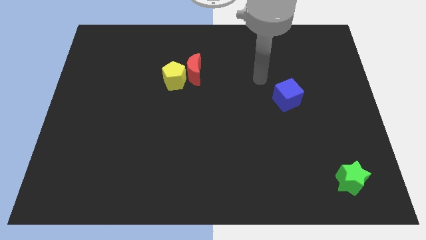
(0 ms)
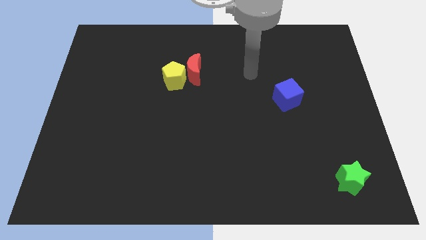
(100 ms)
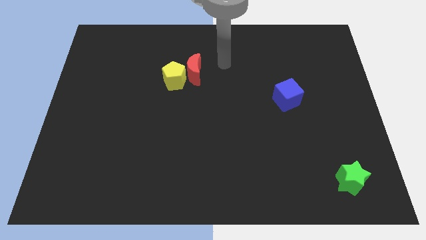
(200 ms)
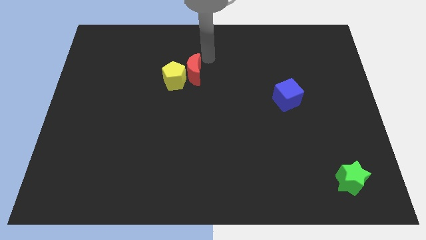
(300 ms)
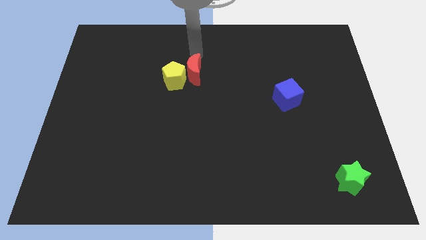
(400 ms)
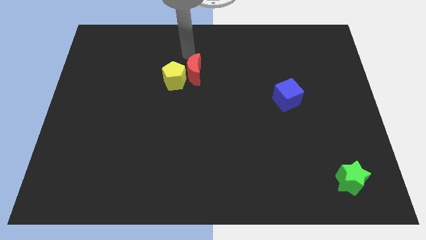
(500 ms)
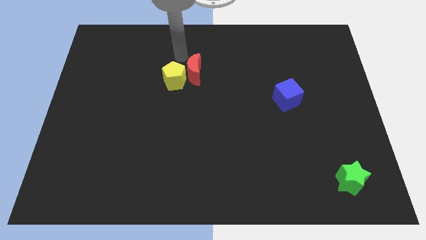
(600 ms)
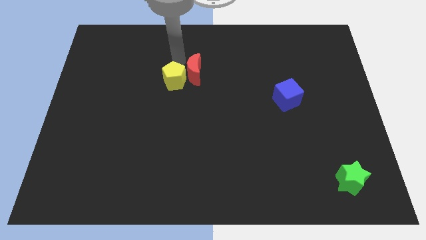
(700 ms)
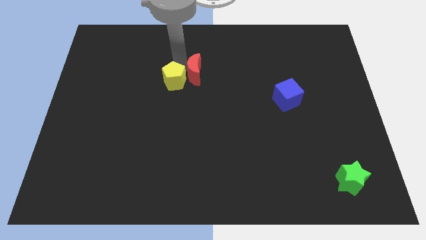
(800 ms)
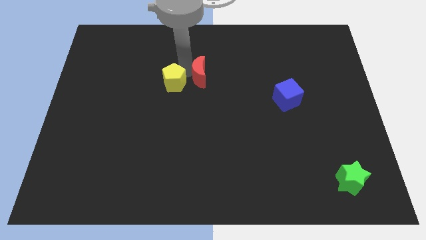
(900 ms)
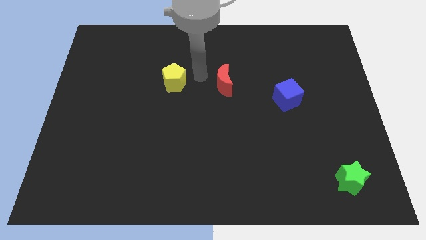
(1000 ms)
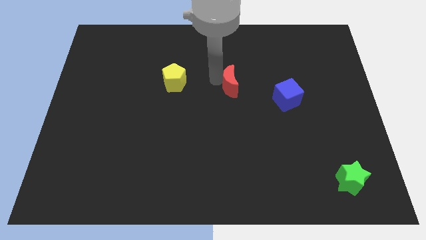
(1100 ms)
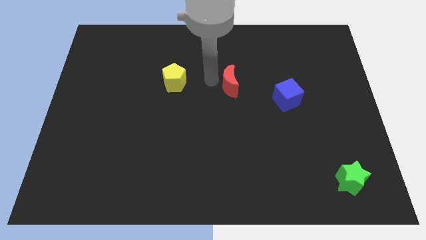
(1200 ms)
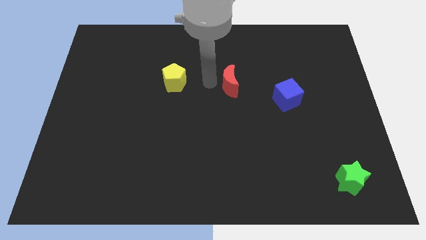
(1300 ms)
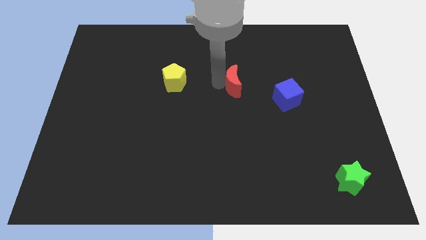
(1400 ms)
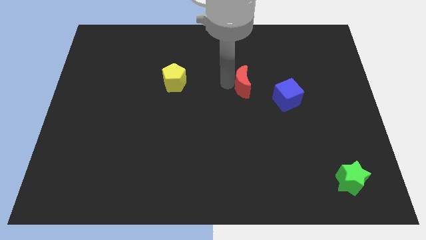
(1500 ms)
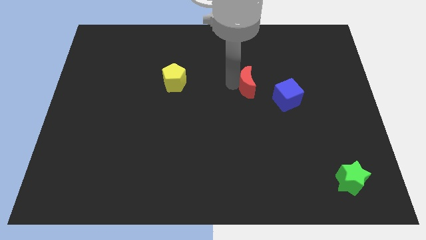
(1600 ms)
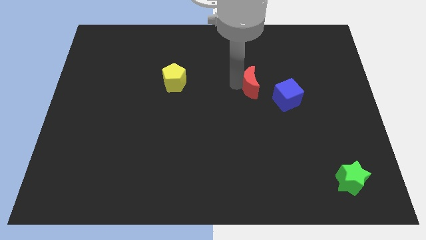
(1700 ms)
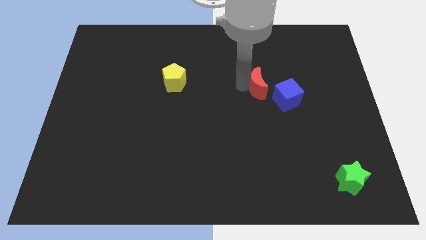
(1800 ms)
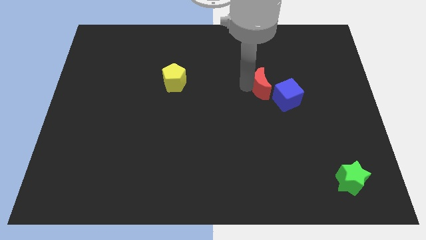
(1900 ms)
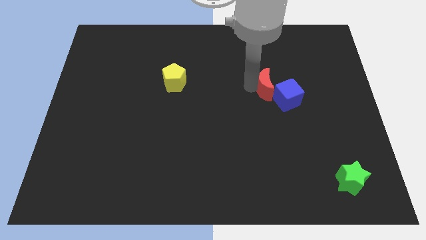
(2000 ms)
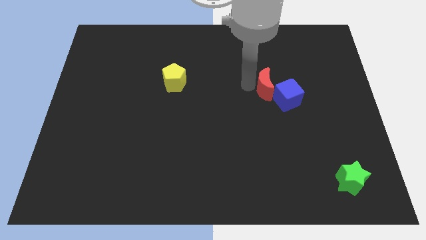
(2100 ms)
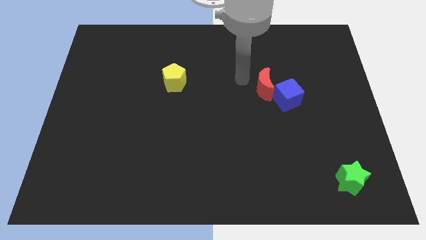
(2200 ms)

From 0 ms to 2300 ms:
slide the moon towards the blue block

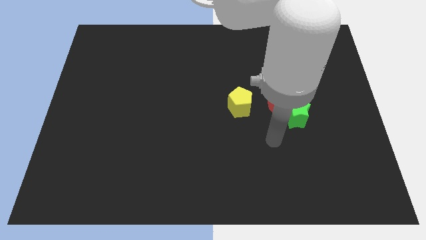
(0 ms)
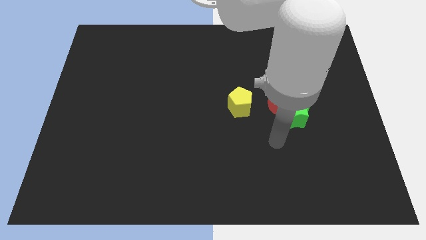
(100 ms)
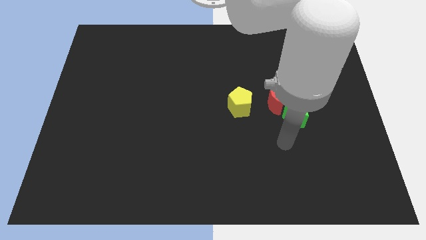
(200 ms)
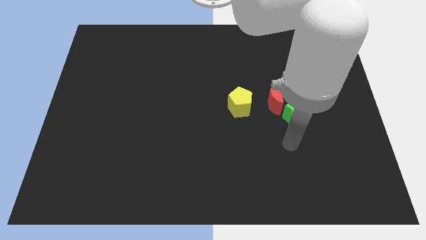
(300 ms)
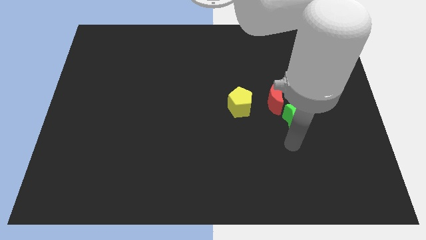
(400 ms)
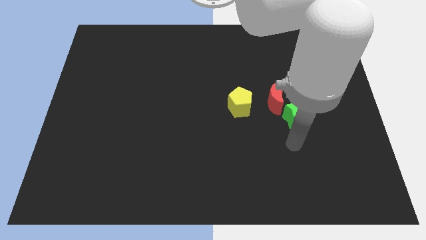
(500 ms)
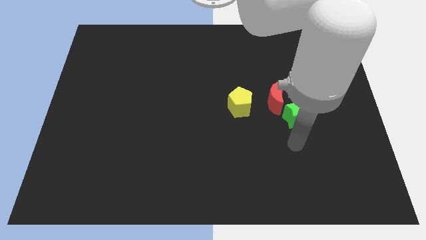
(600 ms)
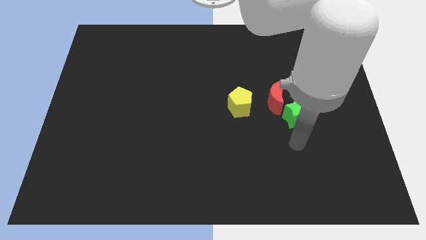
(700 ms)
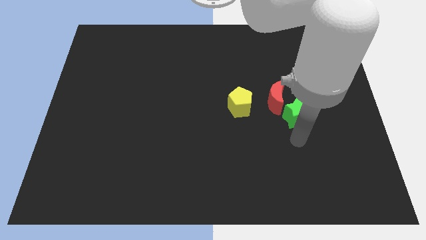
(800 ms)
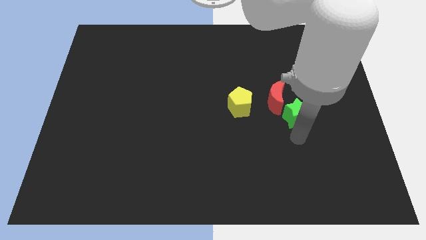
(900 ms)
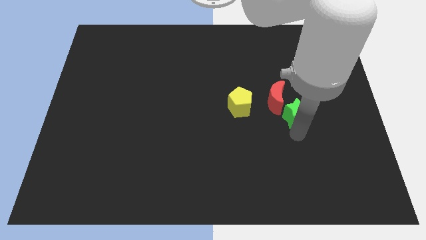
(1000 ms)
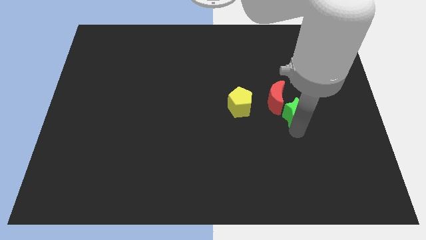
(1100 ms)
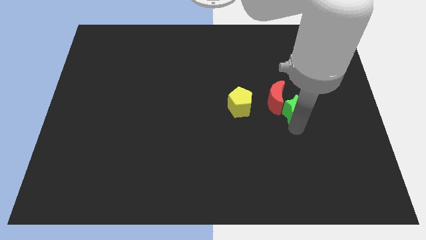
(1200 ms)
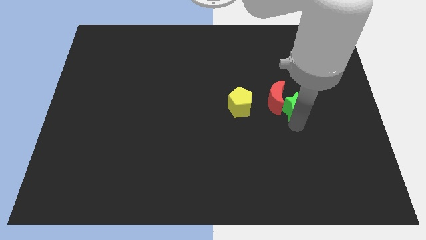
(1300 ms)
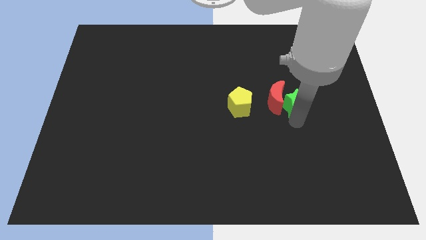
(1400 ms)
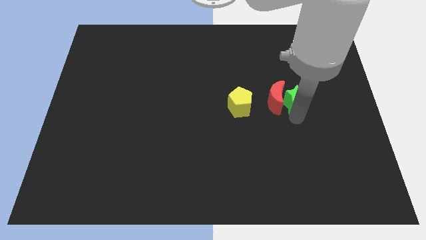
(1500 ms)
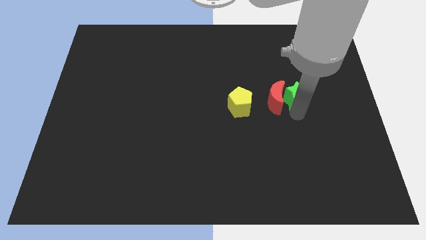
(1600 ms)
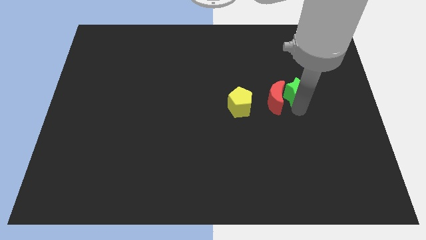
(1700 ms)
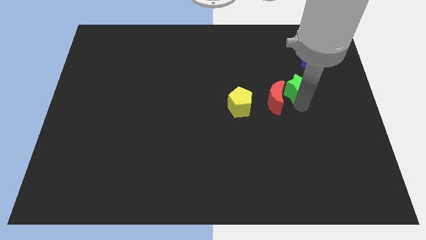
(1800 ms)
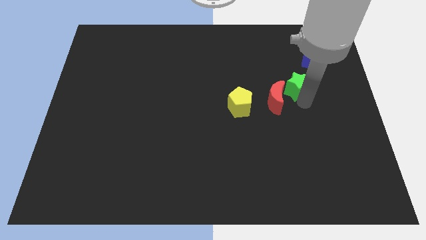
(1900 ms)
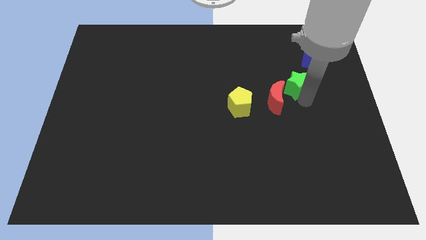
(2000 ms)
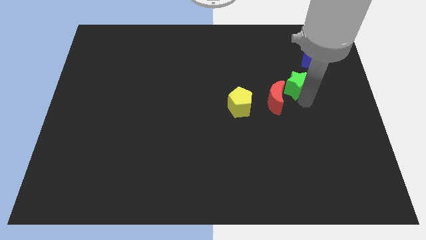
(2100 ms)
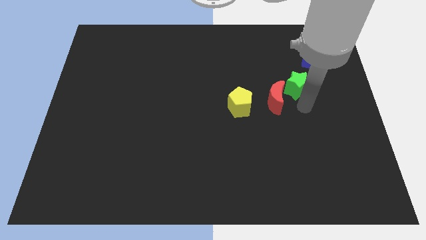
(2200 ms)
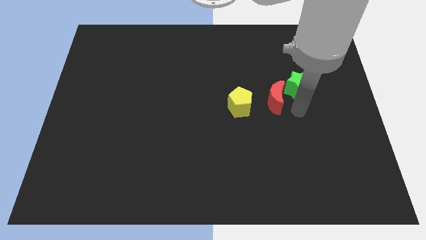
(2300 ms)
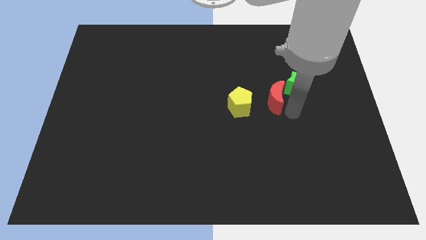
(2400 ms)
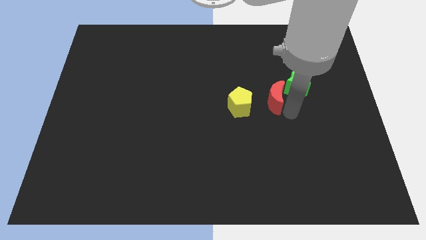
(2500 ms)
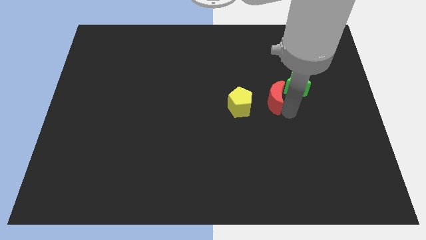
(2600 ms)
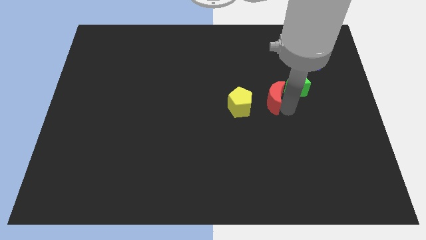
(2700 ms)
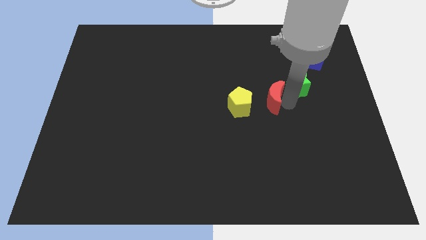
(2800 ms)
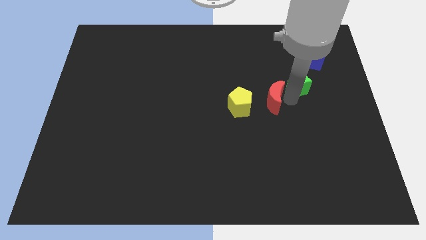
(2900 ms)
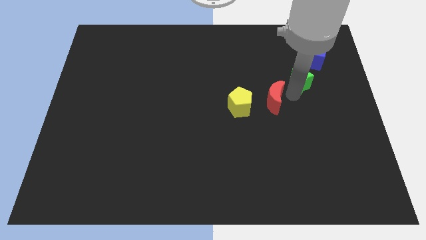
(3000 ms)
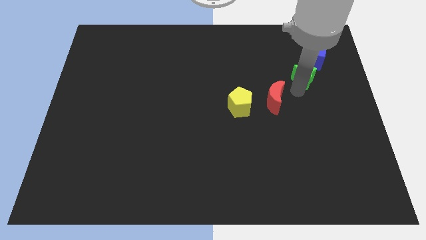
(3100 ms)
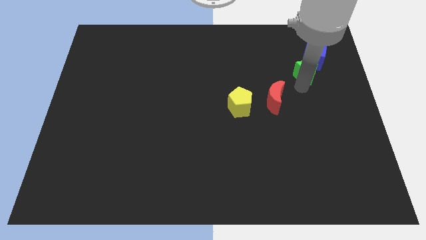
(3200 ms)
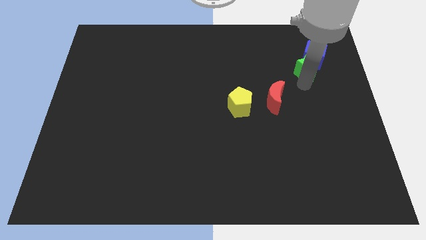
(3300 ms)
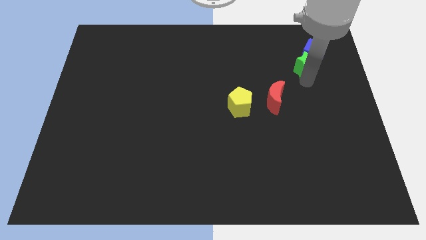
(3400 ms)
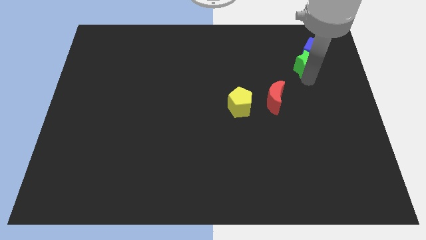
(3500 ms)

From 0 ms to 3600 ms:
put the green star close to the cube

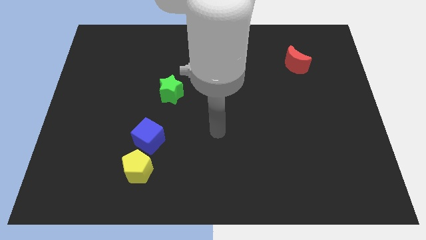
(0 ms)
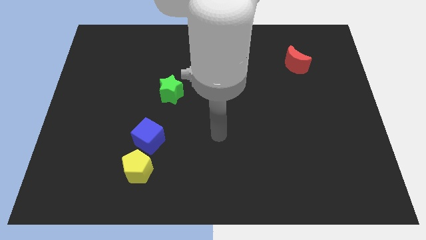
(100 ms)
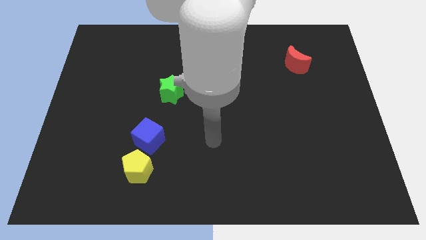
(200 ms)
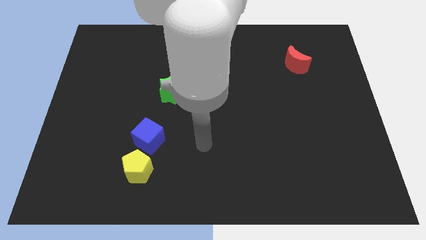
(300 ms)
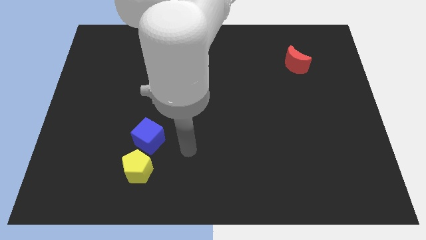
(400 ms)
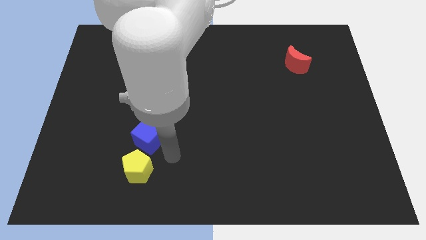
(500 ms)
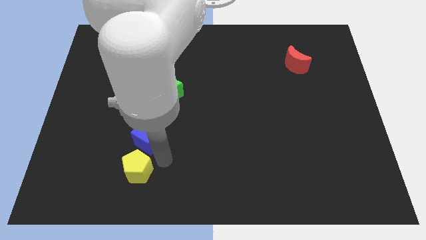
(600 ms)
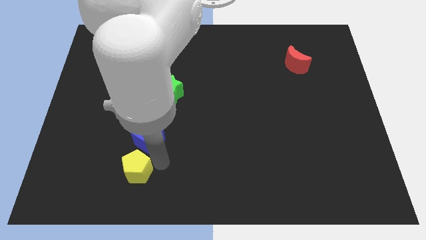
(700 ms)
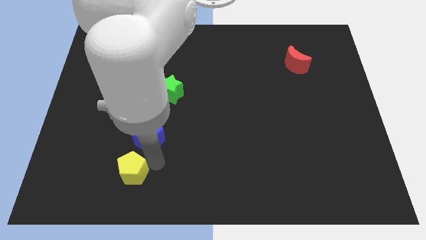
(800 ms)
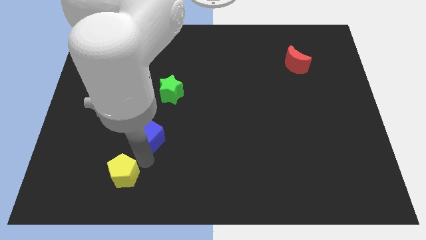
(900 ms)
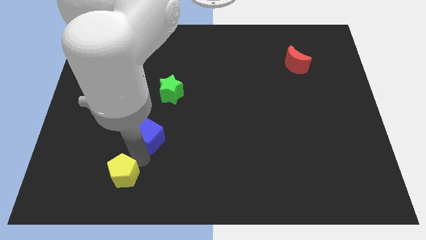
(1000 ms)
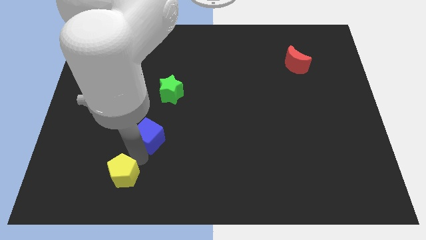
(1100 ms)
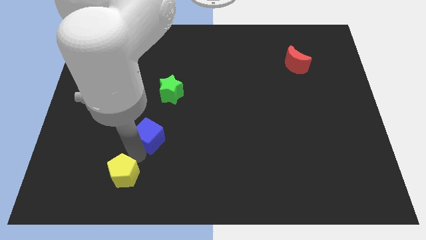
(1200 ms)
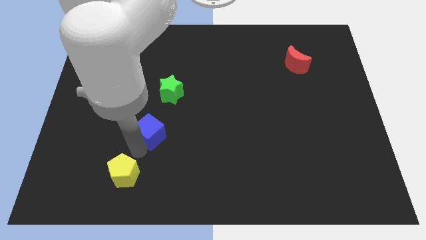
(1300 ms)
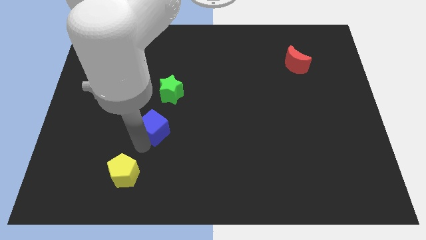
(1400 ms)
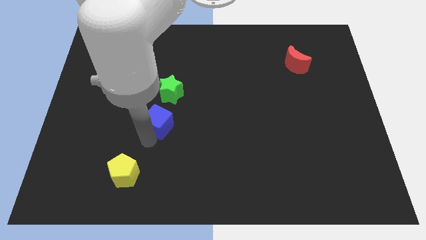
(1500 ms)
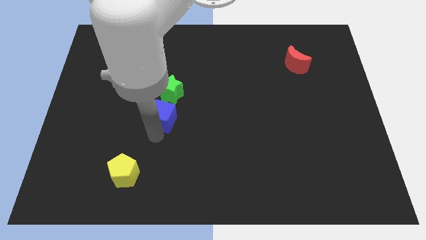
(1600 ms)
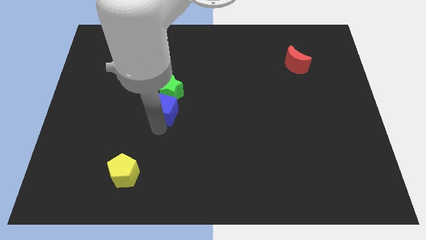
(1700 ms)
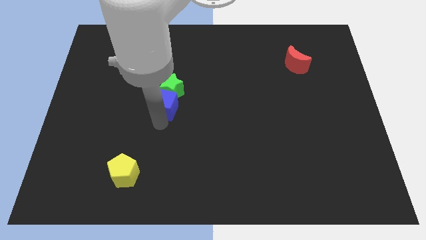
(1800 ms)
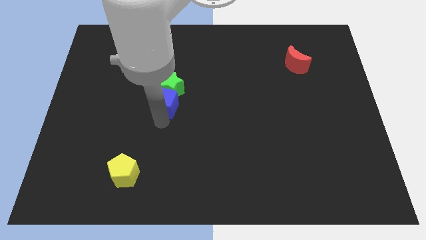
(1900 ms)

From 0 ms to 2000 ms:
slide the blue block next to the green block

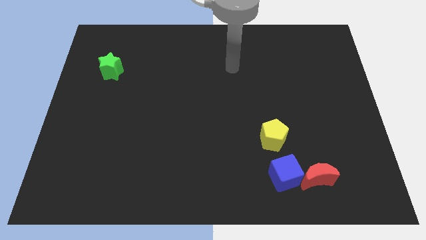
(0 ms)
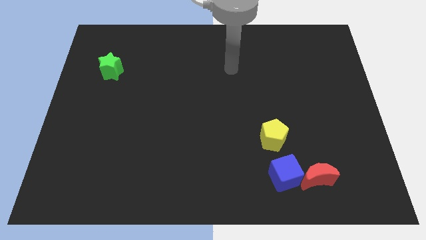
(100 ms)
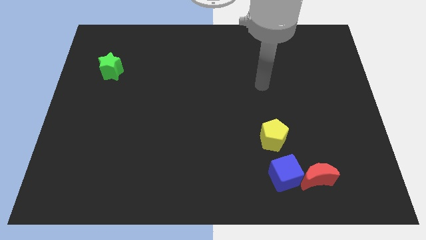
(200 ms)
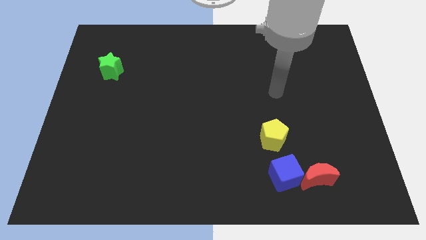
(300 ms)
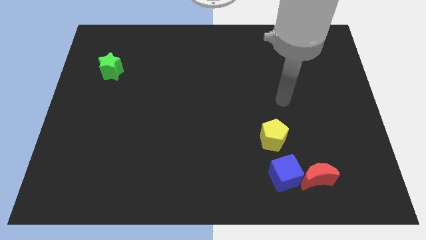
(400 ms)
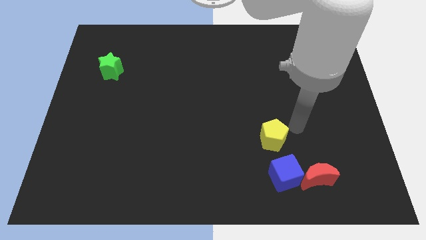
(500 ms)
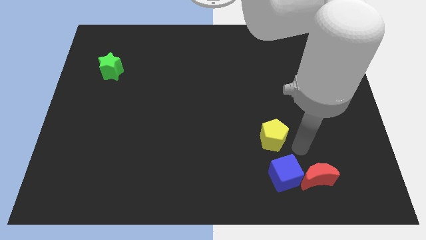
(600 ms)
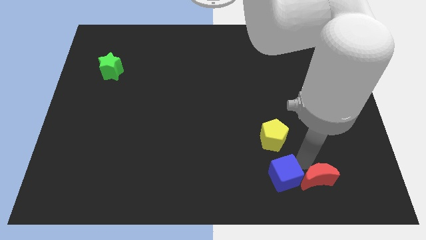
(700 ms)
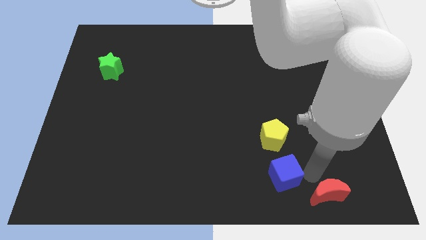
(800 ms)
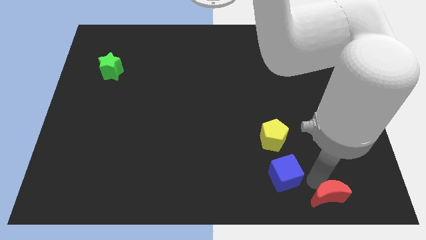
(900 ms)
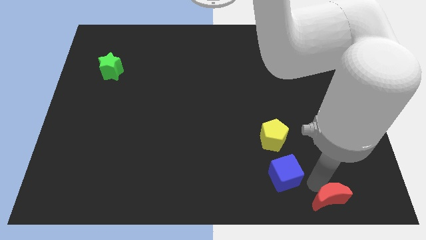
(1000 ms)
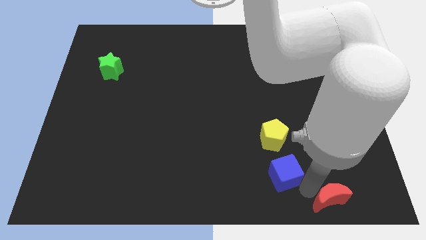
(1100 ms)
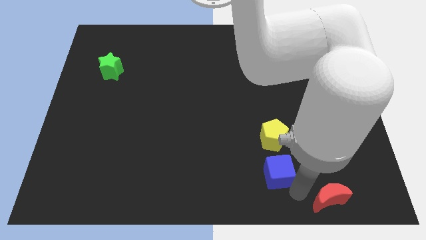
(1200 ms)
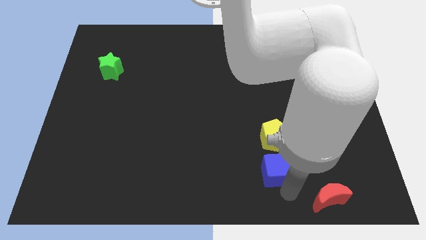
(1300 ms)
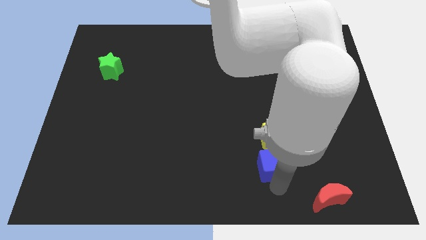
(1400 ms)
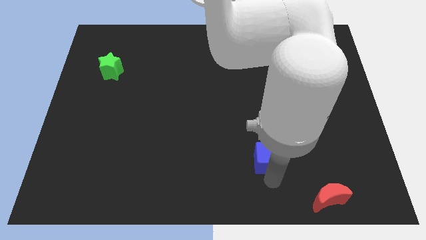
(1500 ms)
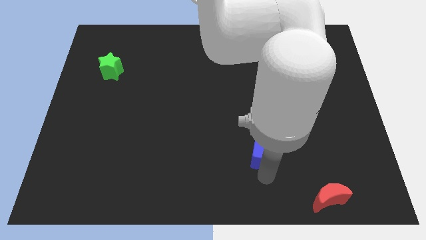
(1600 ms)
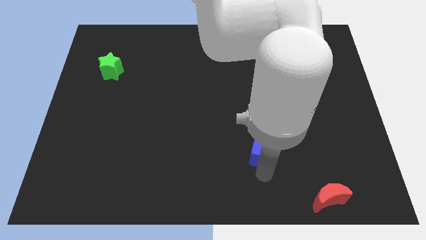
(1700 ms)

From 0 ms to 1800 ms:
push the blue block next to the yellow pentagon
